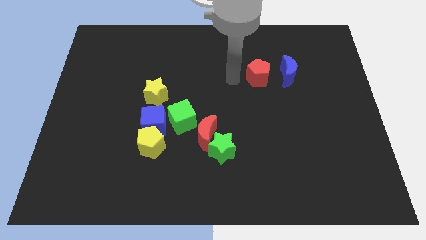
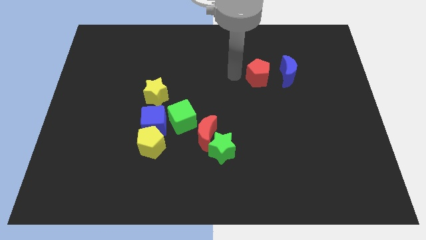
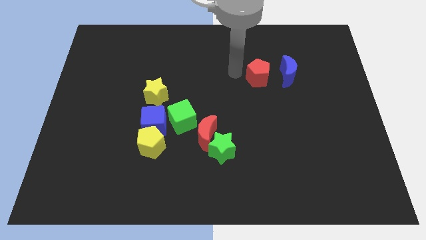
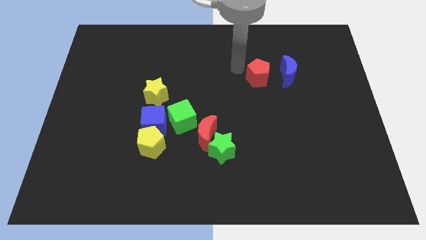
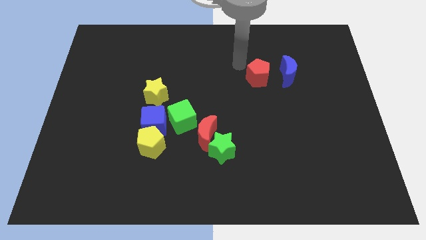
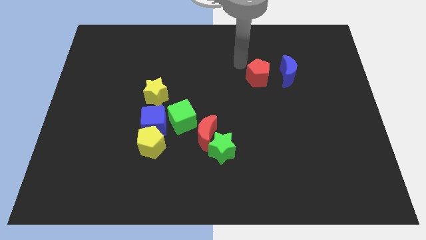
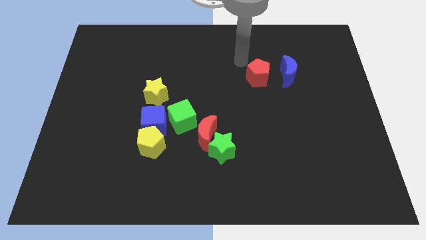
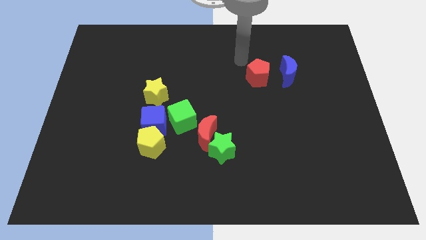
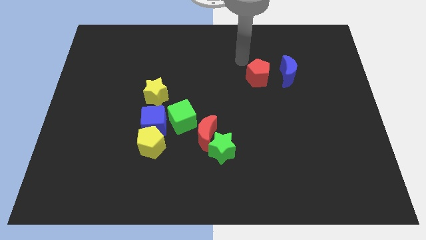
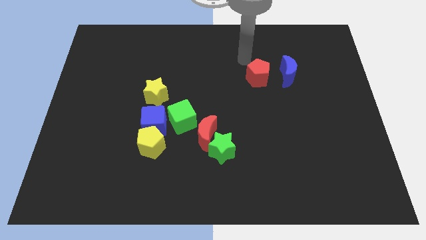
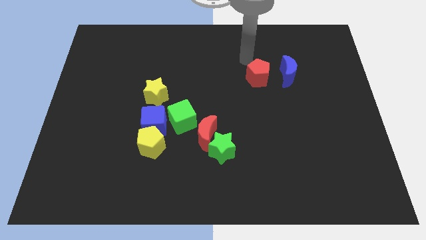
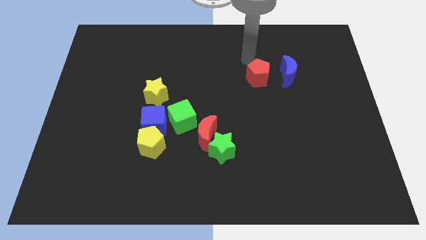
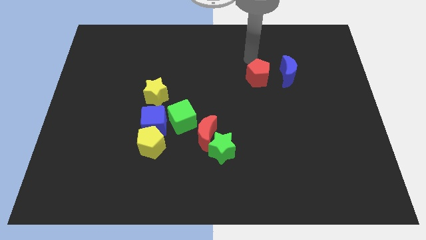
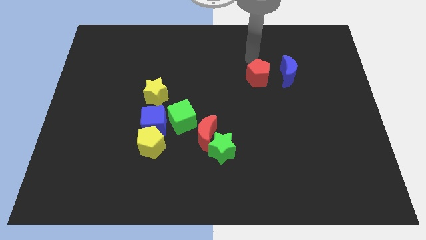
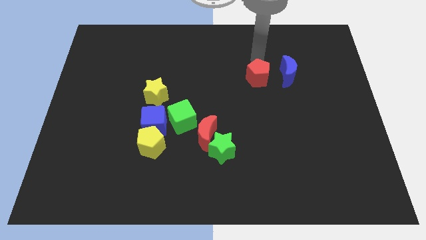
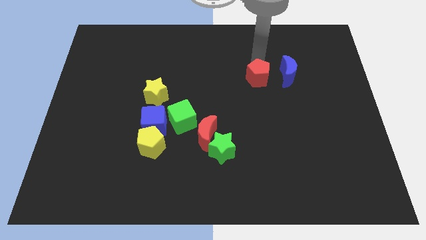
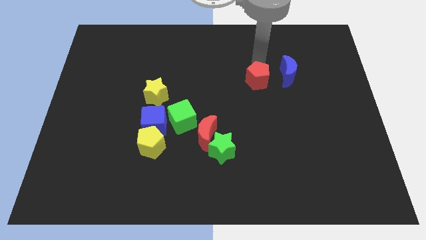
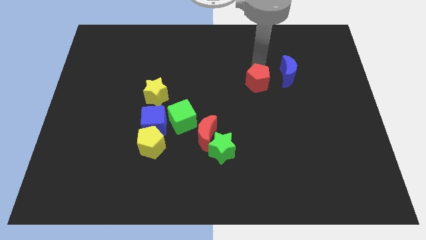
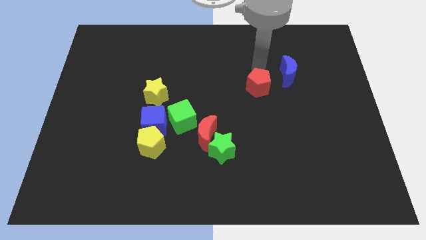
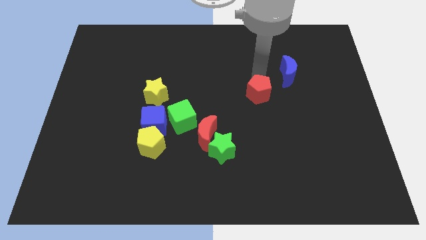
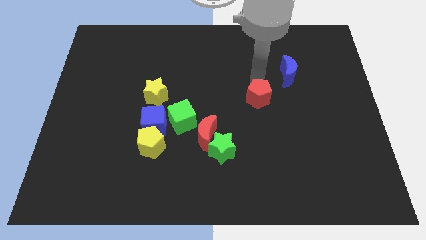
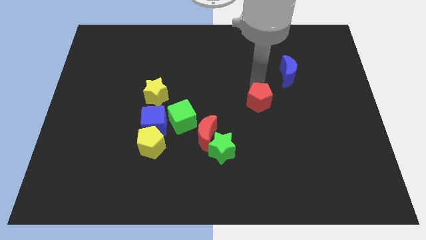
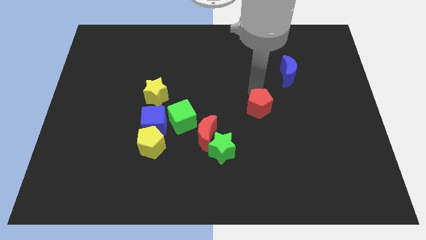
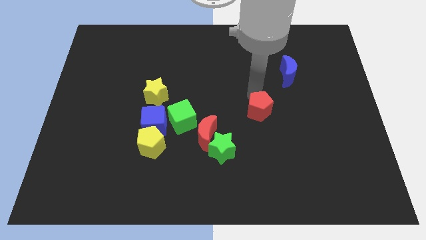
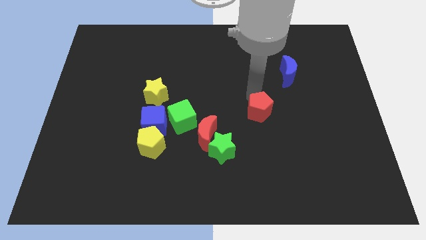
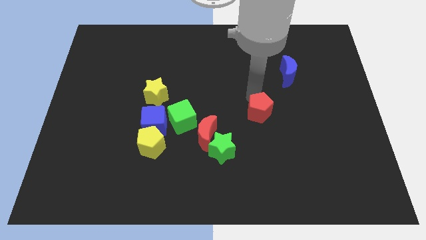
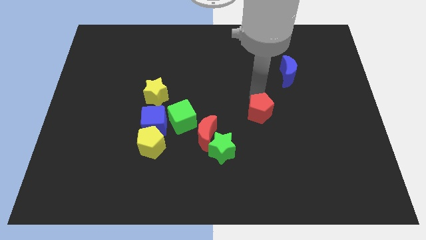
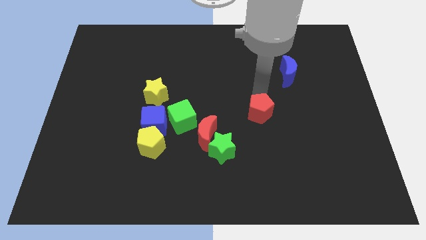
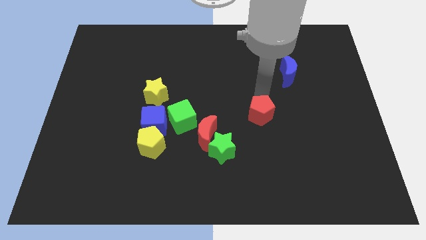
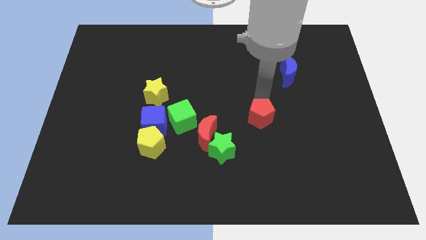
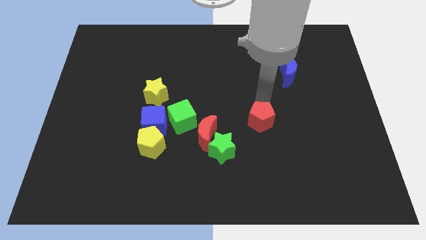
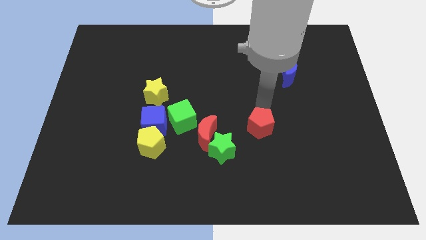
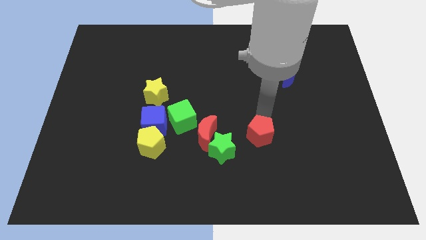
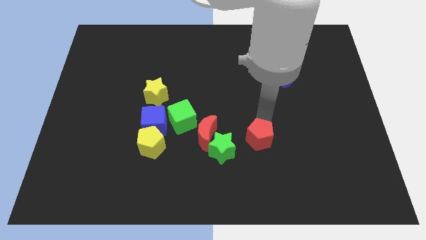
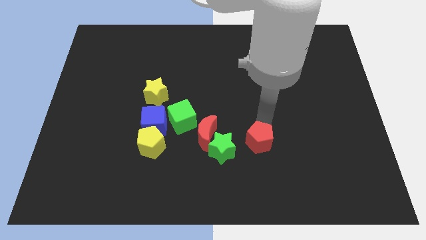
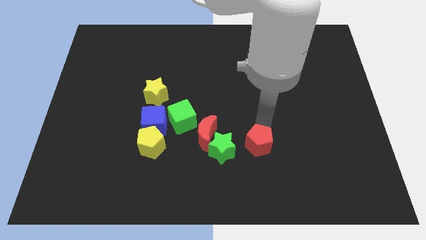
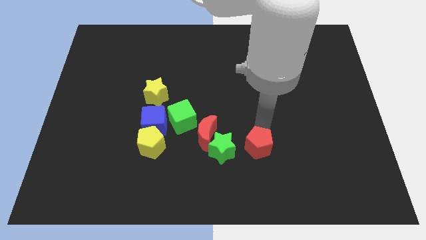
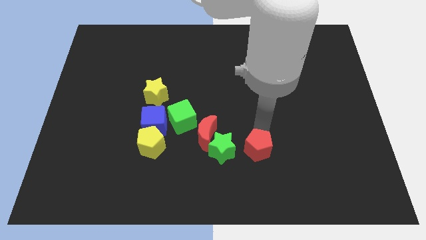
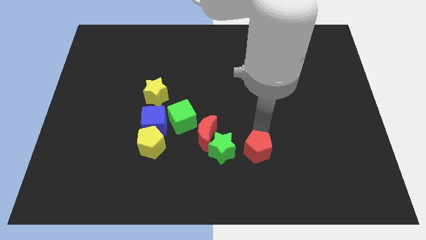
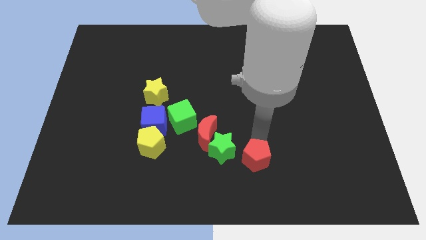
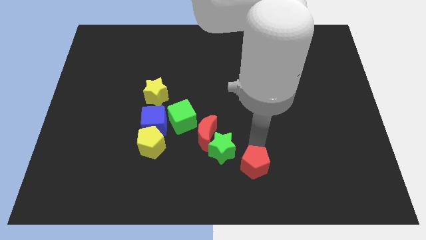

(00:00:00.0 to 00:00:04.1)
drag red pentagon to the right bottom of green star

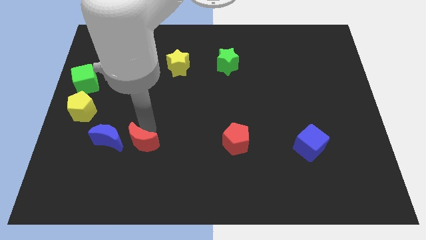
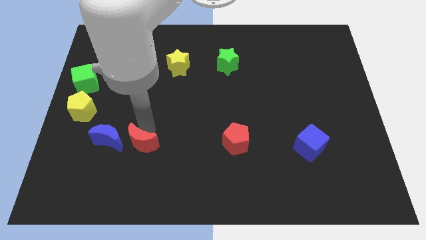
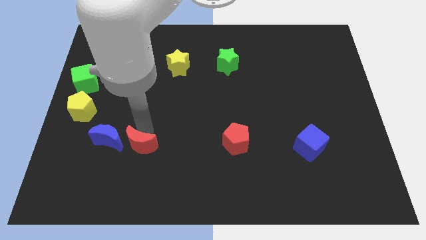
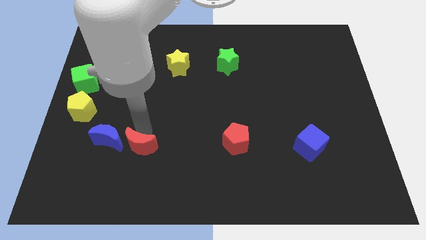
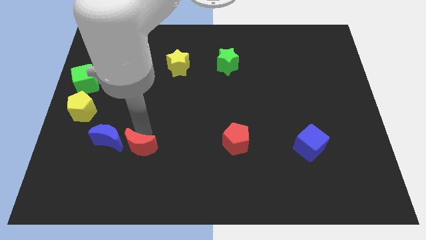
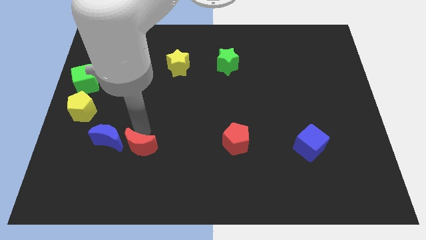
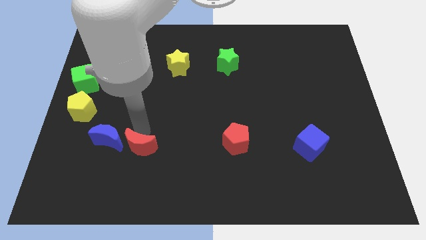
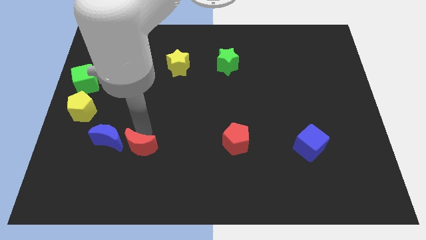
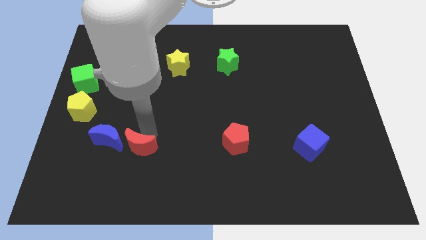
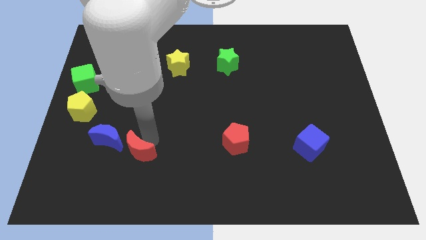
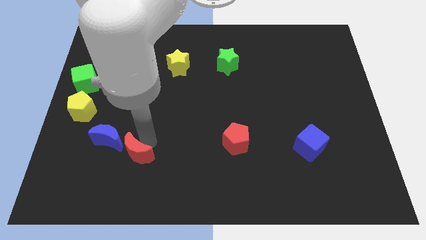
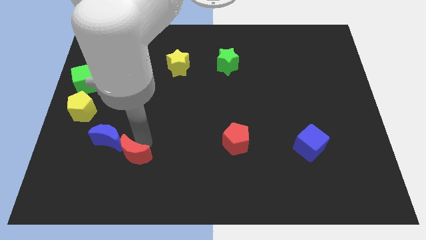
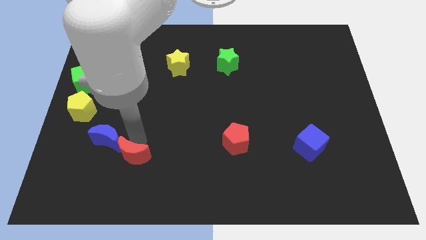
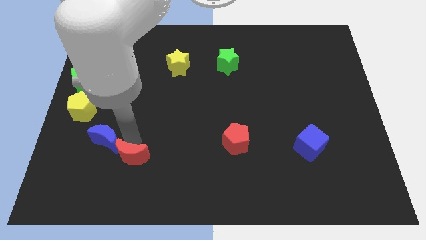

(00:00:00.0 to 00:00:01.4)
place red moon diagonally below blue moon

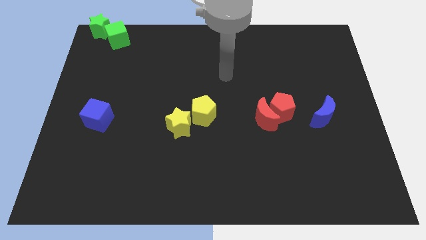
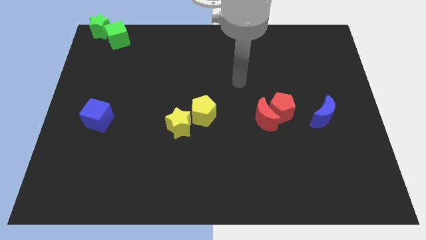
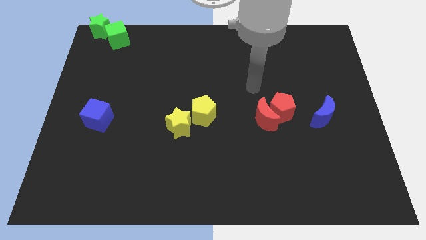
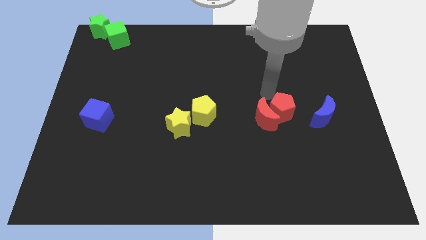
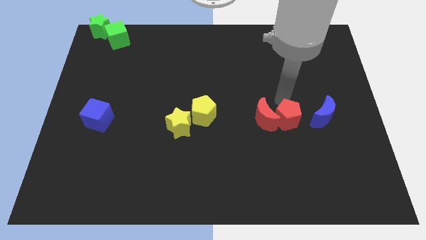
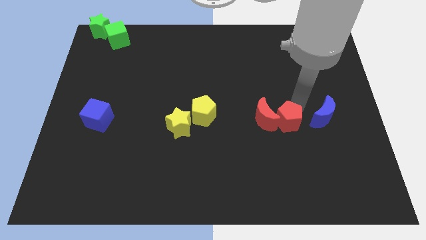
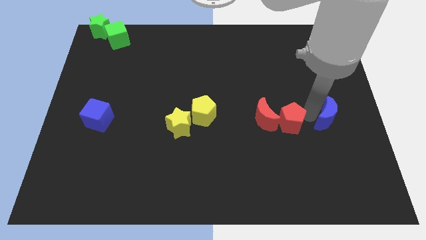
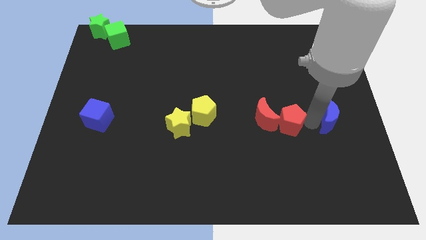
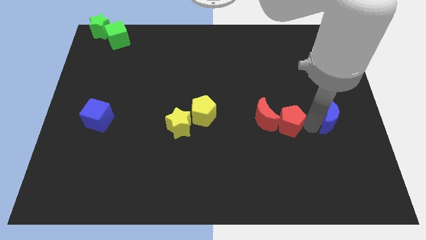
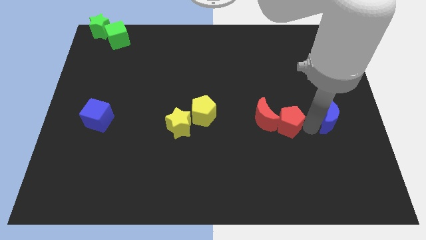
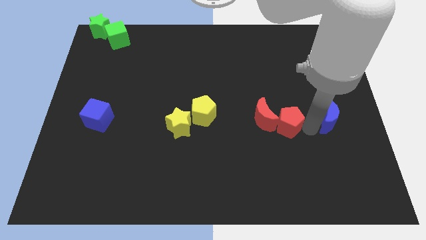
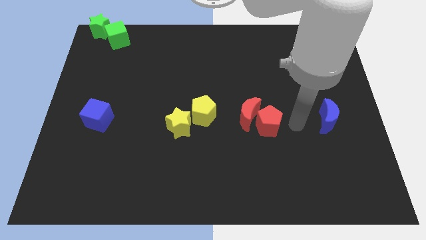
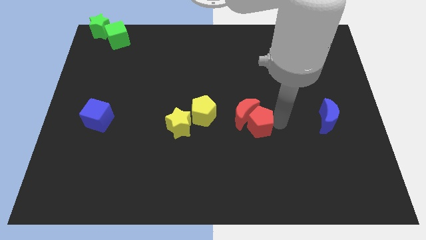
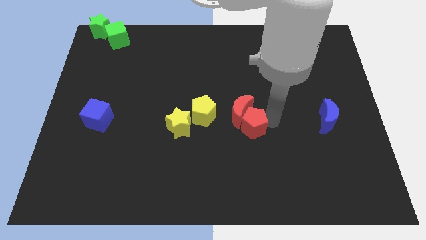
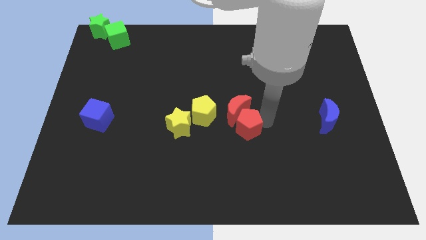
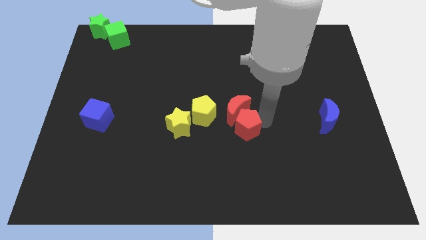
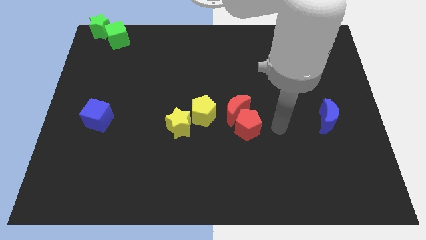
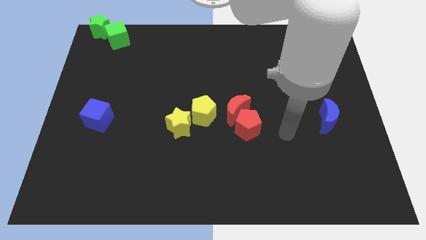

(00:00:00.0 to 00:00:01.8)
push the red pentagon into the red moon

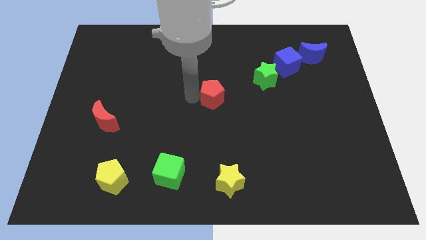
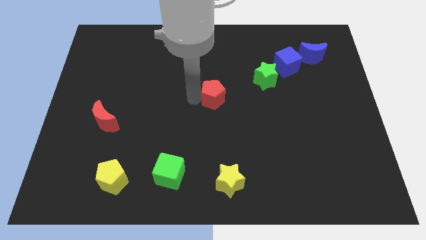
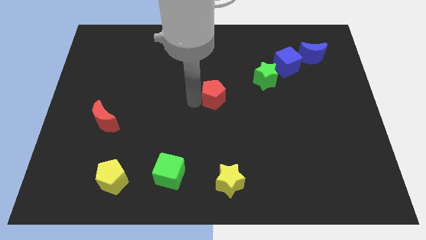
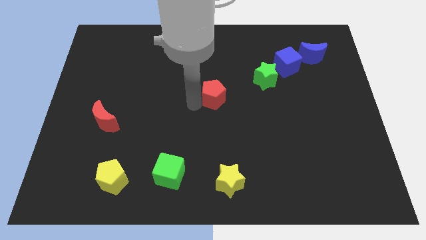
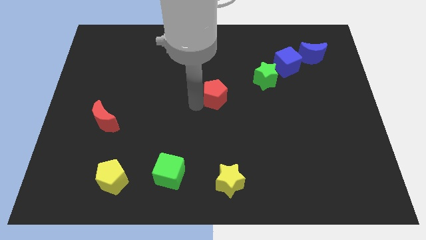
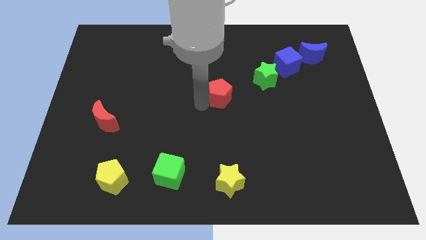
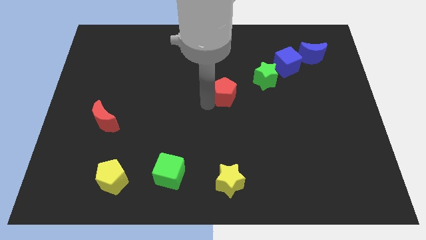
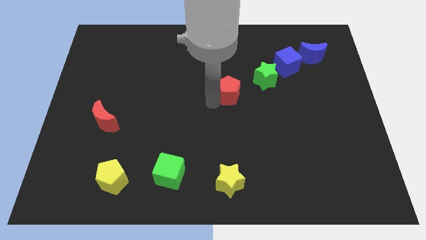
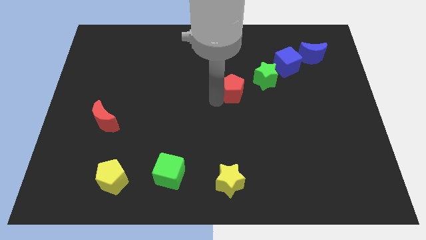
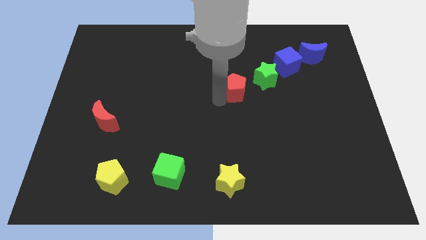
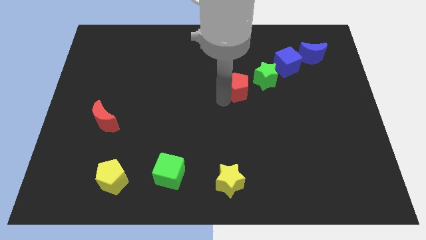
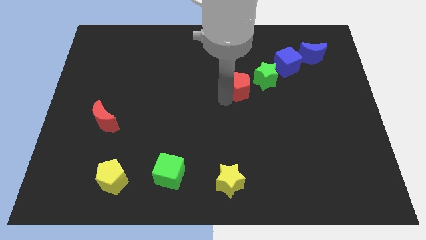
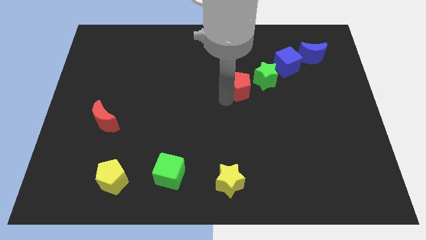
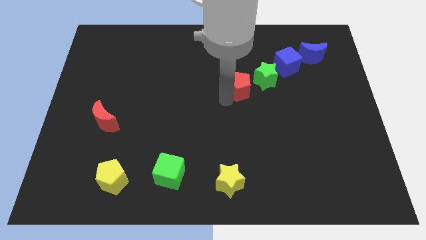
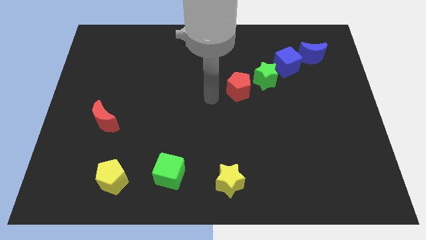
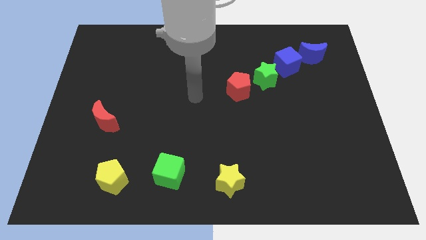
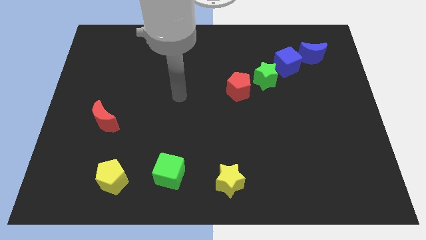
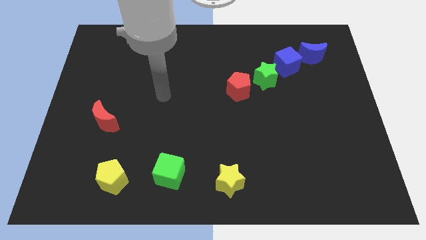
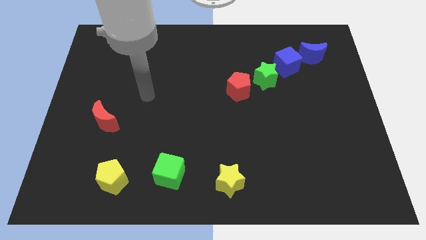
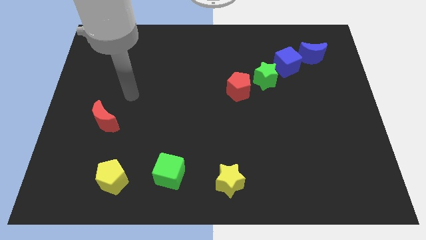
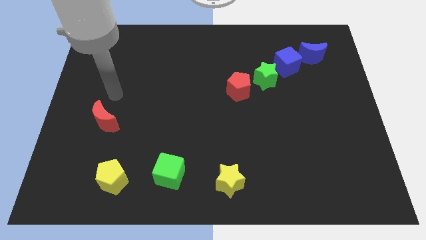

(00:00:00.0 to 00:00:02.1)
slide red pentagon towards green star
